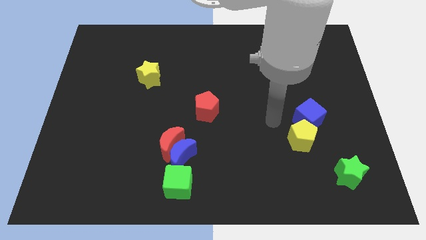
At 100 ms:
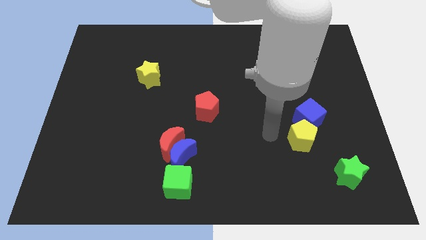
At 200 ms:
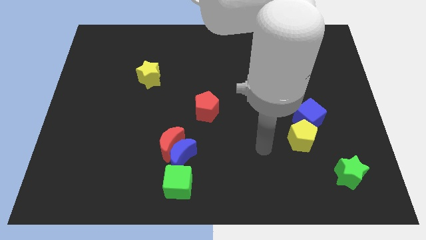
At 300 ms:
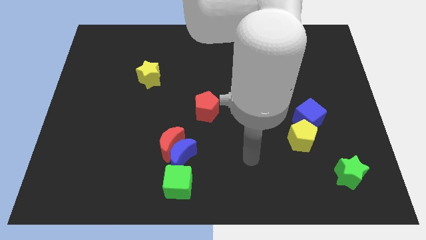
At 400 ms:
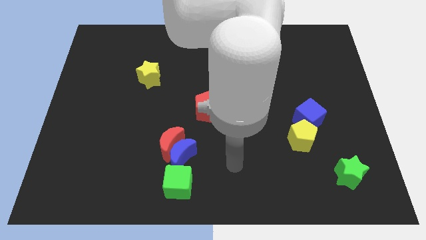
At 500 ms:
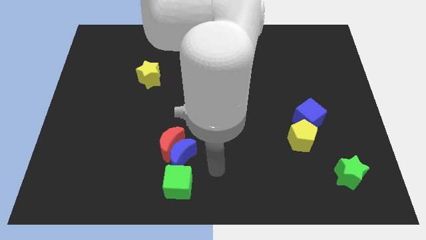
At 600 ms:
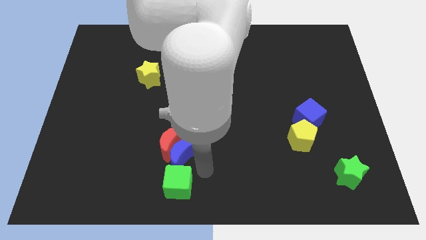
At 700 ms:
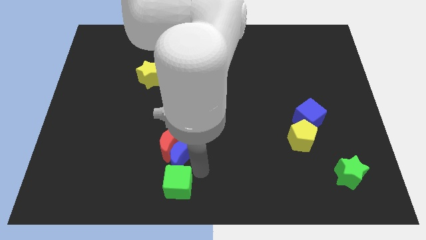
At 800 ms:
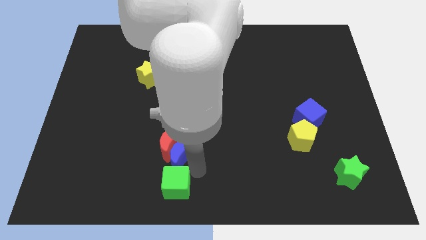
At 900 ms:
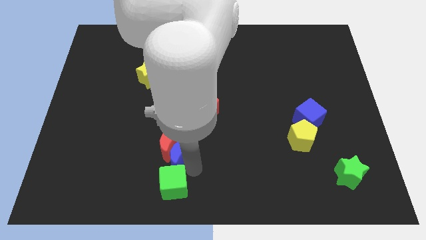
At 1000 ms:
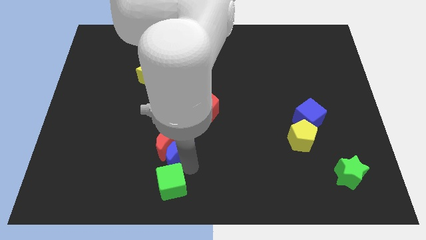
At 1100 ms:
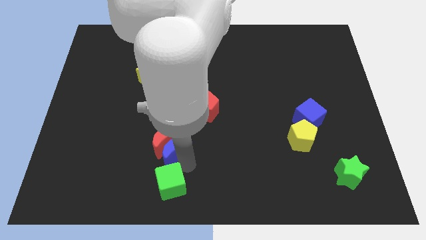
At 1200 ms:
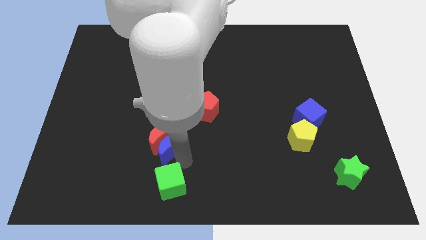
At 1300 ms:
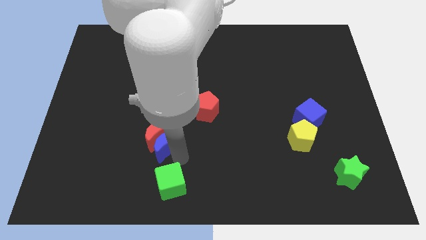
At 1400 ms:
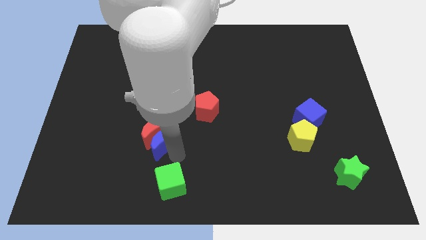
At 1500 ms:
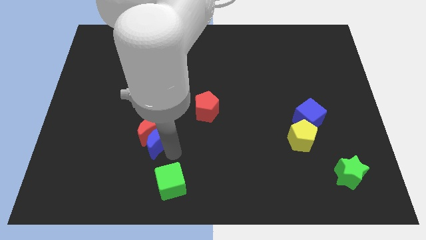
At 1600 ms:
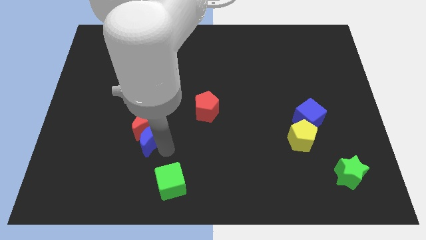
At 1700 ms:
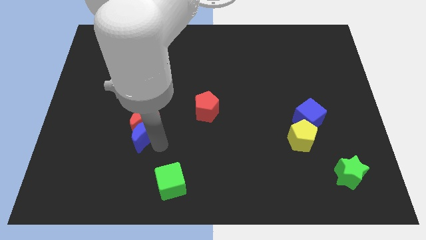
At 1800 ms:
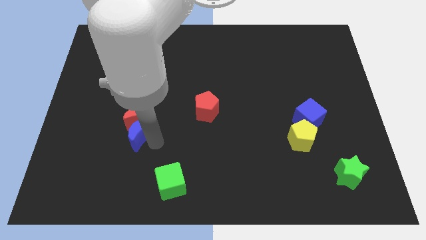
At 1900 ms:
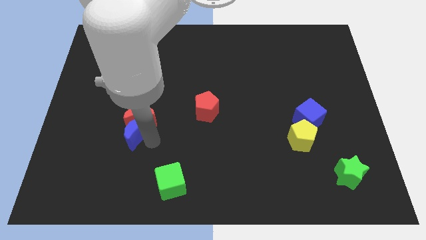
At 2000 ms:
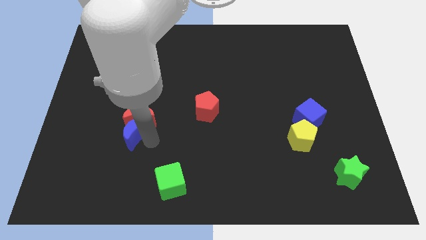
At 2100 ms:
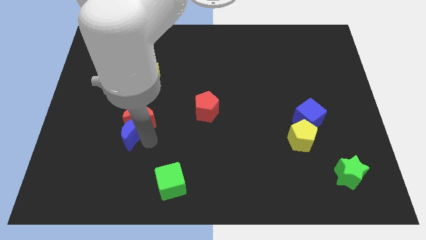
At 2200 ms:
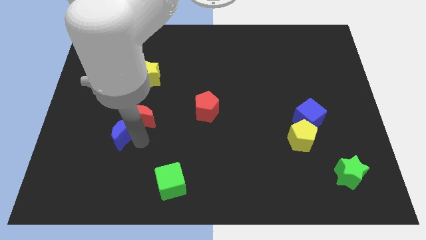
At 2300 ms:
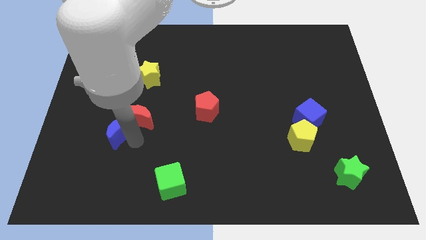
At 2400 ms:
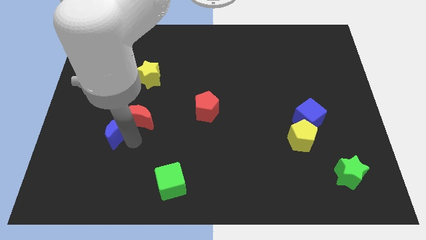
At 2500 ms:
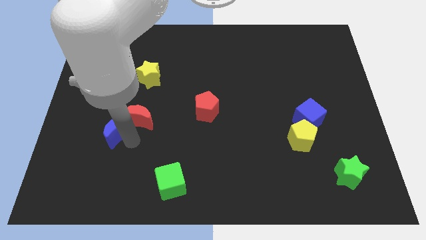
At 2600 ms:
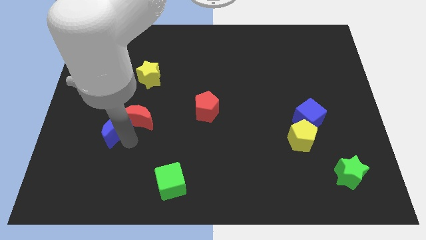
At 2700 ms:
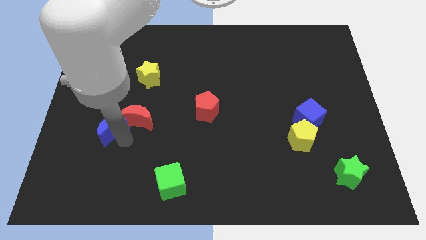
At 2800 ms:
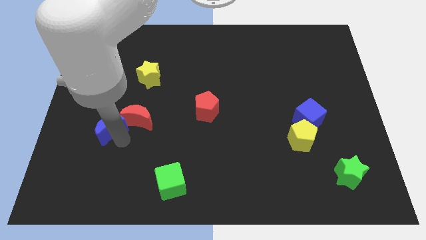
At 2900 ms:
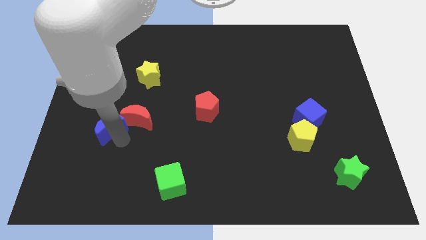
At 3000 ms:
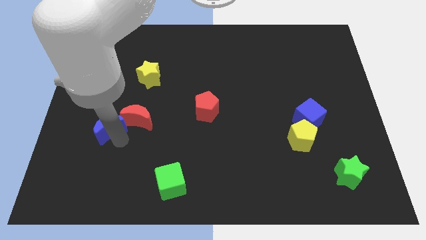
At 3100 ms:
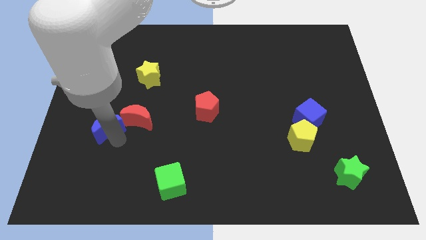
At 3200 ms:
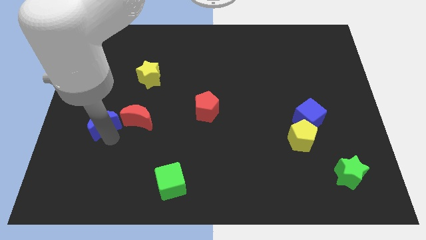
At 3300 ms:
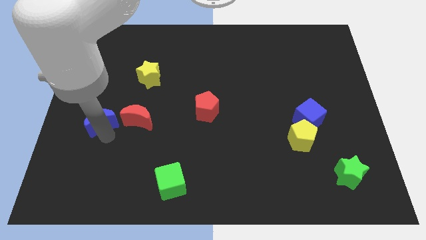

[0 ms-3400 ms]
move blue moon left beside the red moon

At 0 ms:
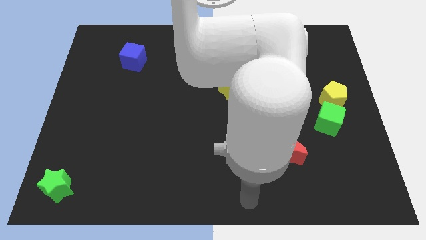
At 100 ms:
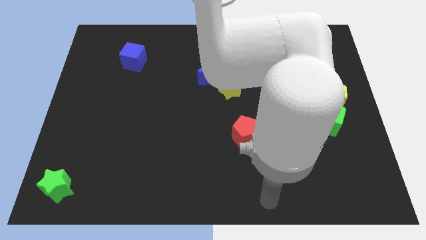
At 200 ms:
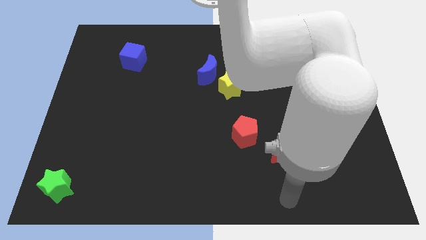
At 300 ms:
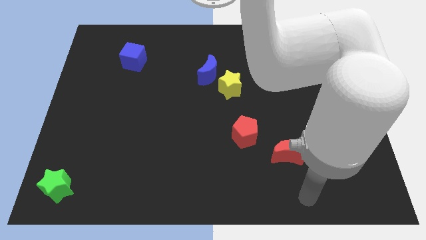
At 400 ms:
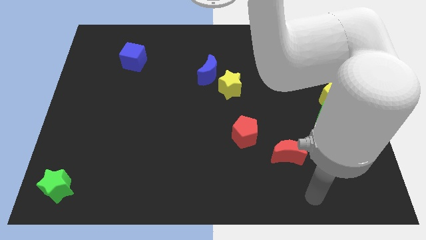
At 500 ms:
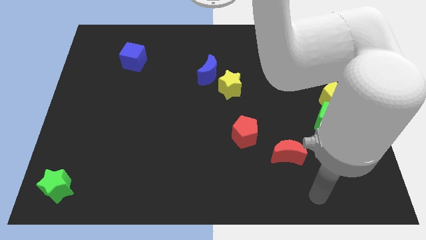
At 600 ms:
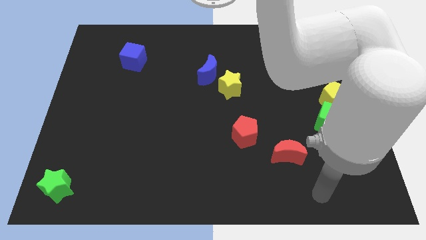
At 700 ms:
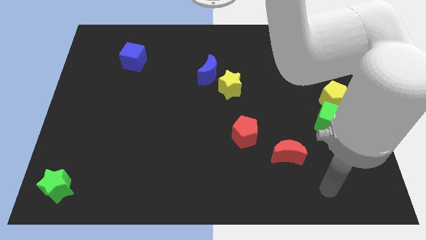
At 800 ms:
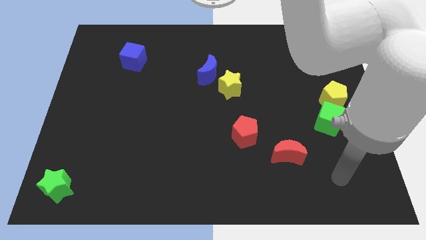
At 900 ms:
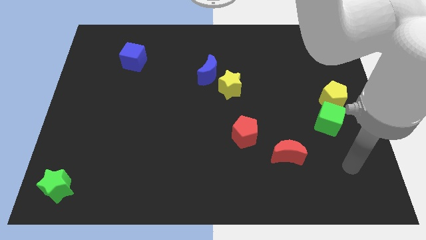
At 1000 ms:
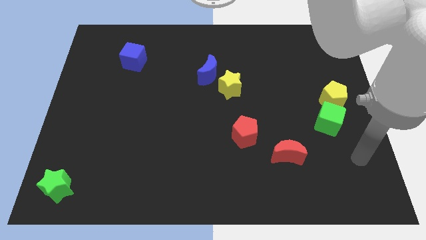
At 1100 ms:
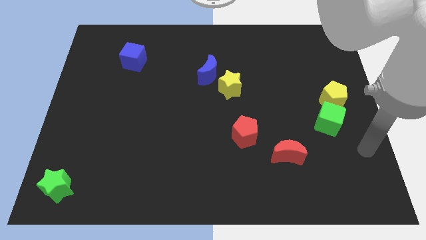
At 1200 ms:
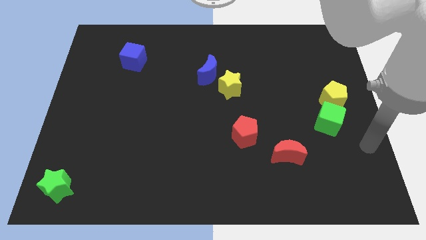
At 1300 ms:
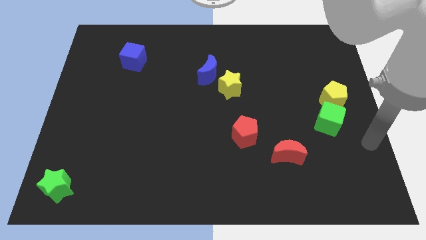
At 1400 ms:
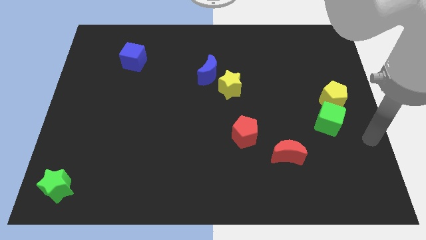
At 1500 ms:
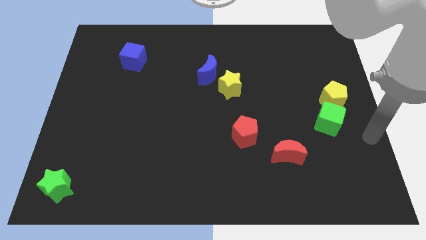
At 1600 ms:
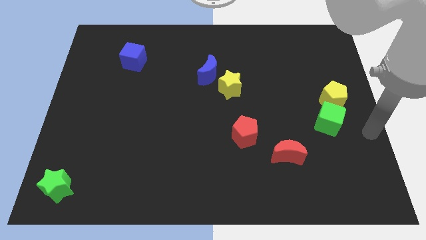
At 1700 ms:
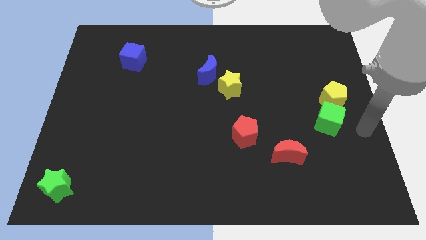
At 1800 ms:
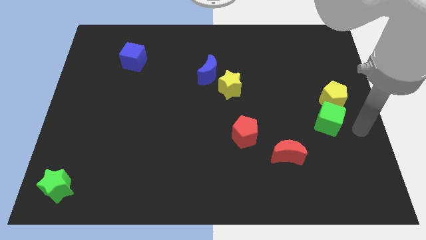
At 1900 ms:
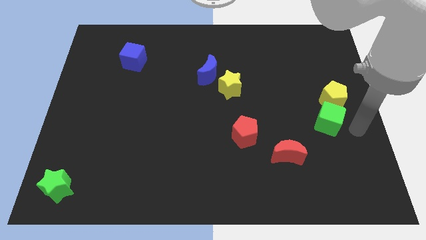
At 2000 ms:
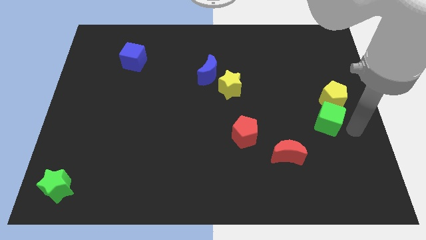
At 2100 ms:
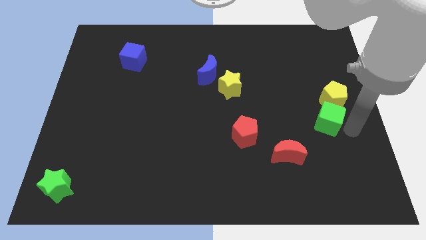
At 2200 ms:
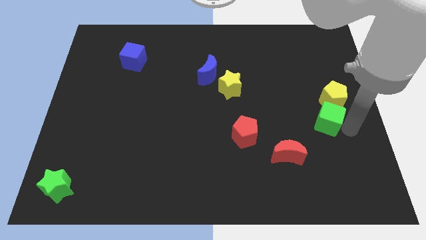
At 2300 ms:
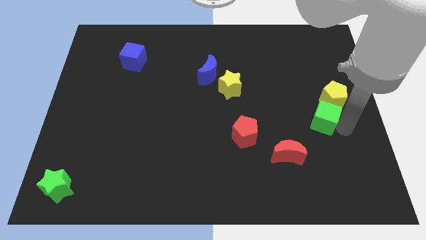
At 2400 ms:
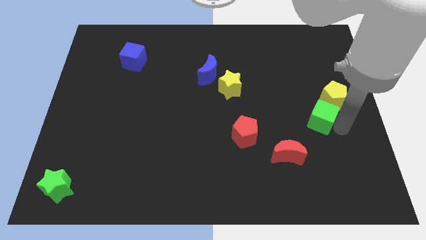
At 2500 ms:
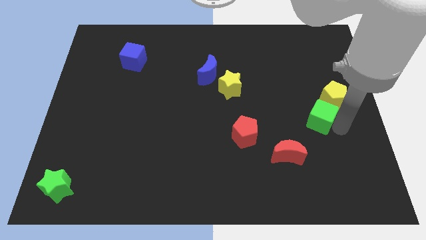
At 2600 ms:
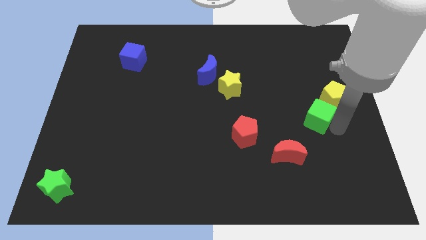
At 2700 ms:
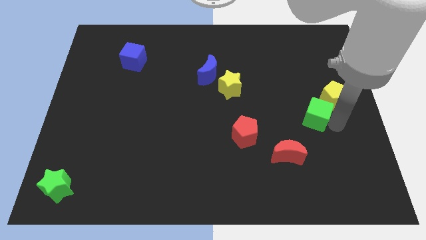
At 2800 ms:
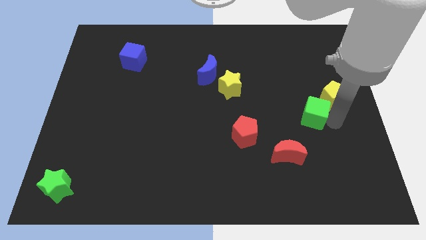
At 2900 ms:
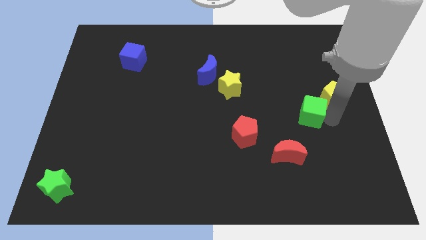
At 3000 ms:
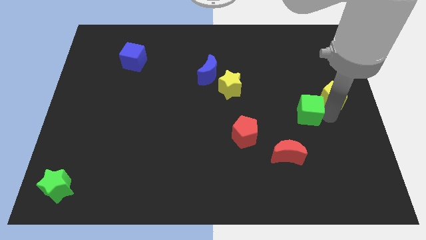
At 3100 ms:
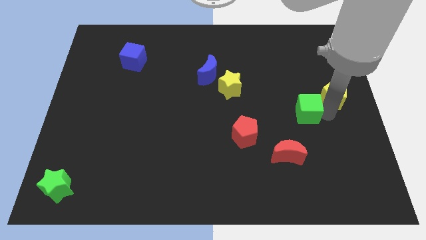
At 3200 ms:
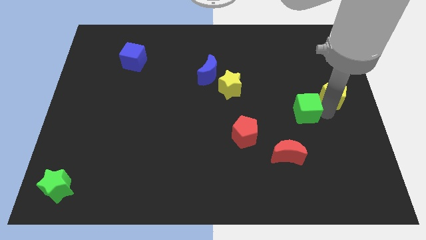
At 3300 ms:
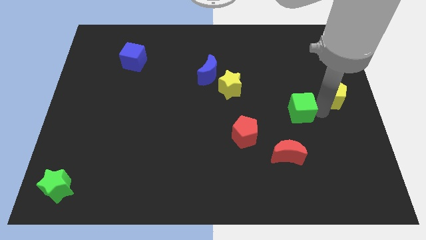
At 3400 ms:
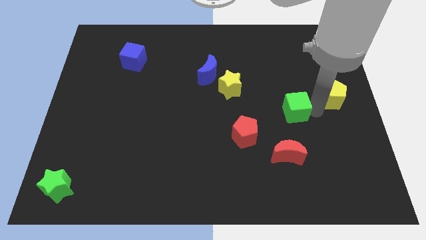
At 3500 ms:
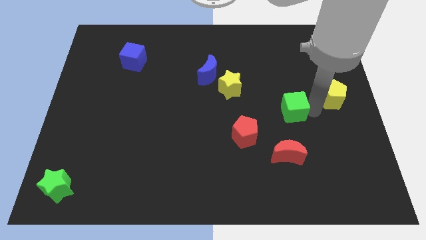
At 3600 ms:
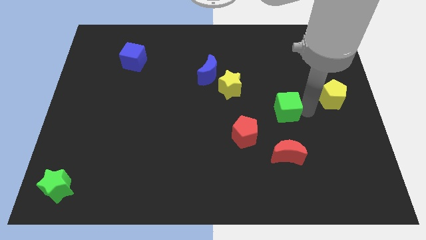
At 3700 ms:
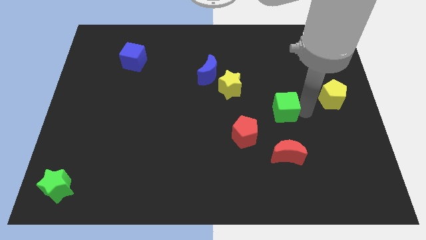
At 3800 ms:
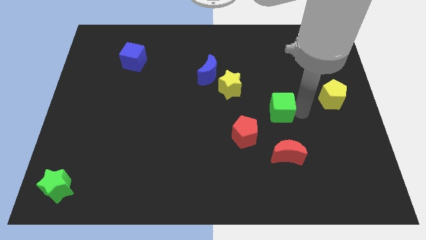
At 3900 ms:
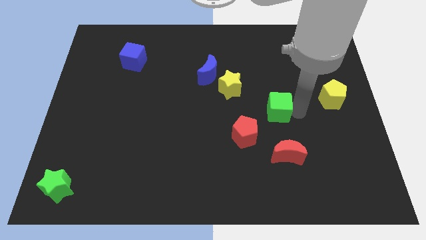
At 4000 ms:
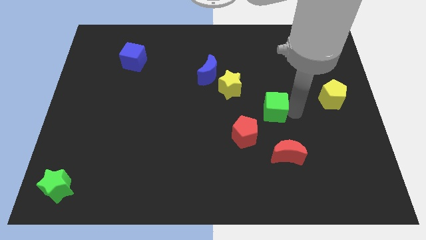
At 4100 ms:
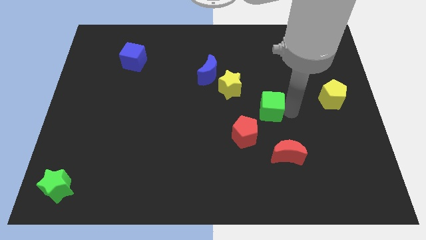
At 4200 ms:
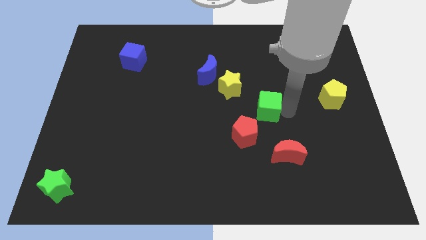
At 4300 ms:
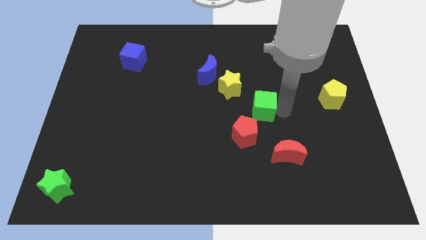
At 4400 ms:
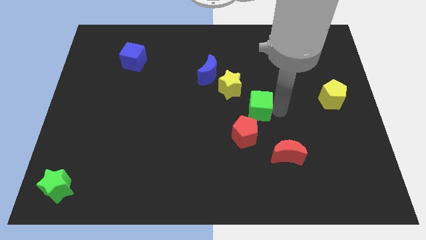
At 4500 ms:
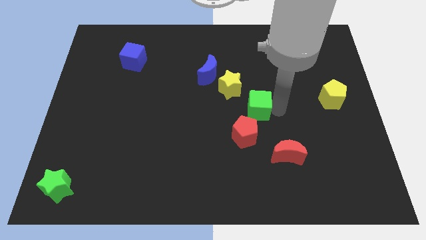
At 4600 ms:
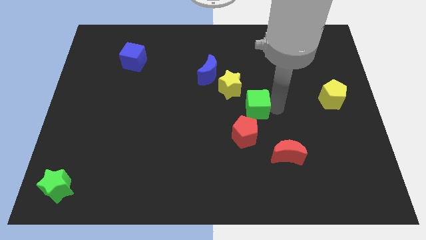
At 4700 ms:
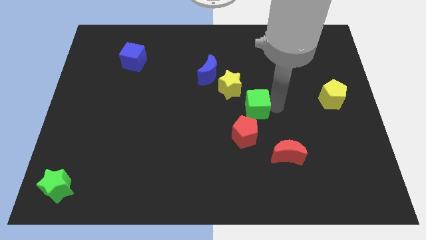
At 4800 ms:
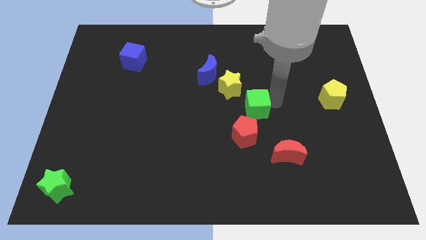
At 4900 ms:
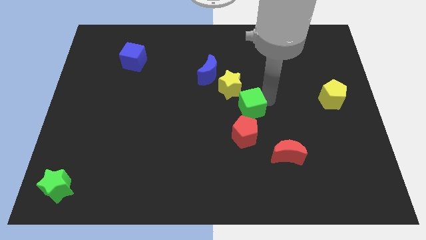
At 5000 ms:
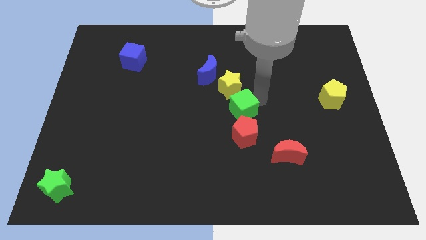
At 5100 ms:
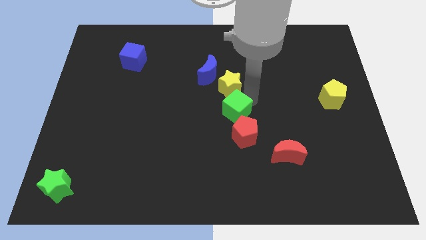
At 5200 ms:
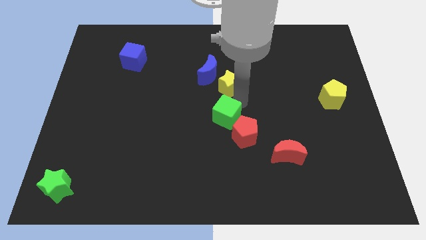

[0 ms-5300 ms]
place the green cube in between the red pentagon and the yellow star

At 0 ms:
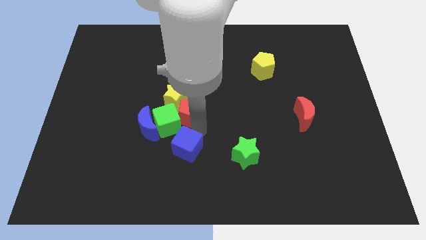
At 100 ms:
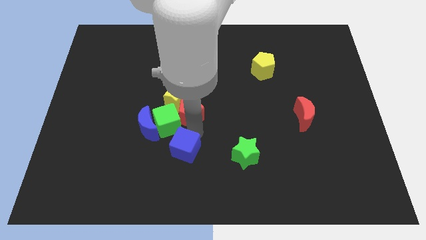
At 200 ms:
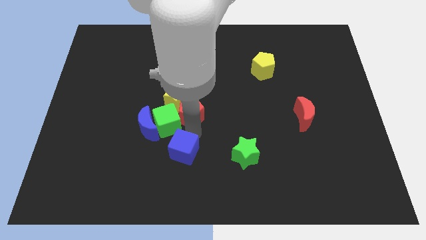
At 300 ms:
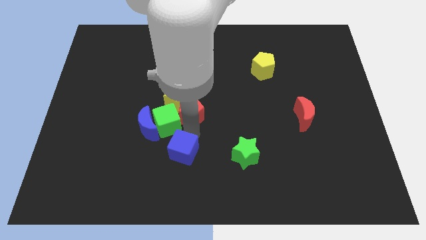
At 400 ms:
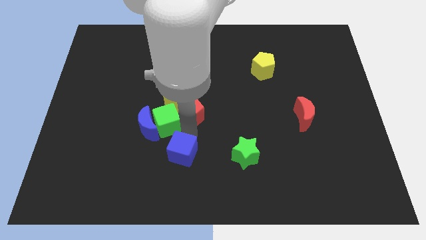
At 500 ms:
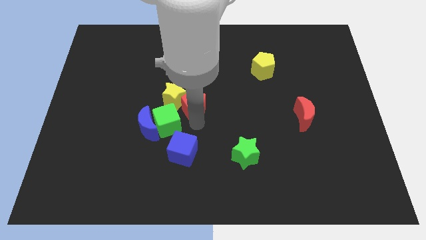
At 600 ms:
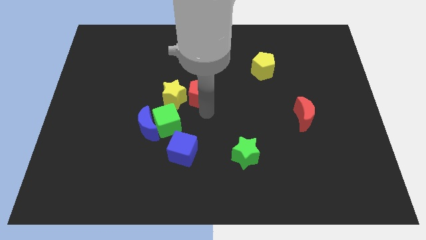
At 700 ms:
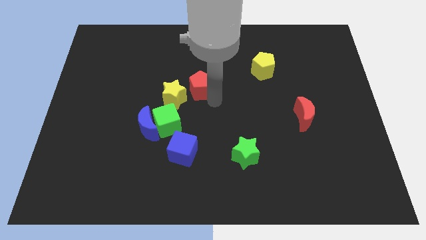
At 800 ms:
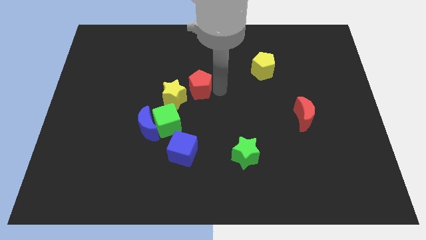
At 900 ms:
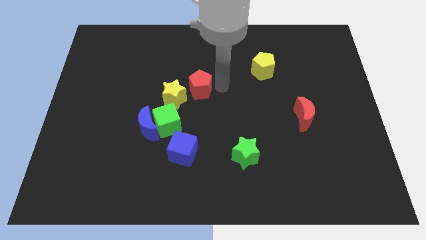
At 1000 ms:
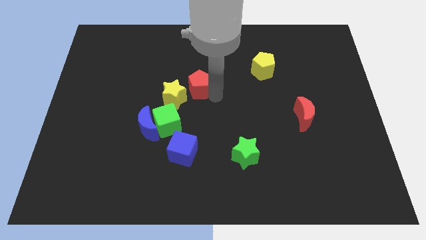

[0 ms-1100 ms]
separate red pentagon and blue cube
